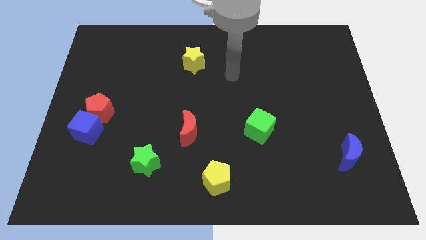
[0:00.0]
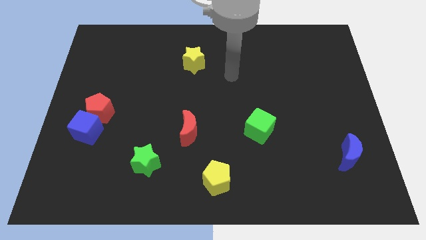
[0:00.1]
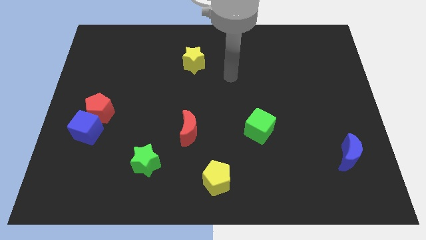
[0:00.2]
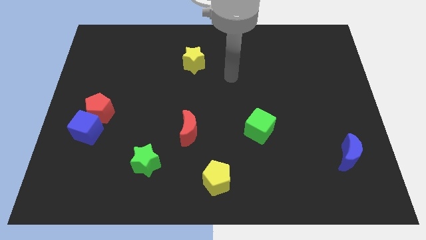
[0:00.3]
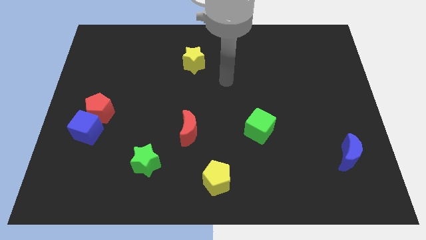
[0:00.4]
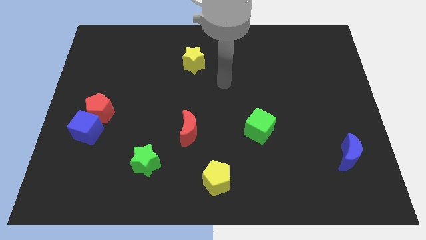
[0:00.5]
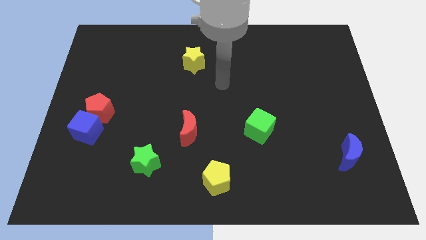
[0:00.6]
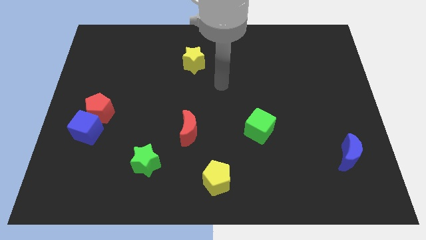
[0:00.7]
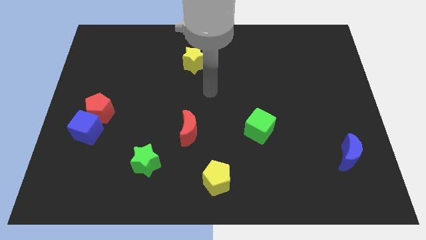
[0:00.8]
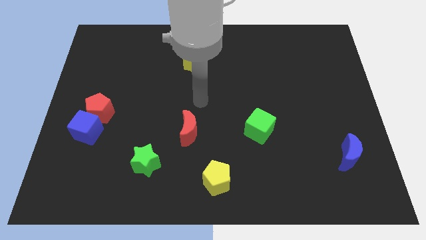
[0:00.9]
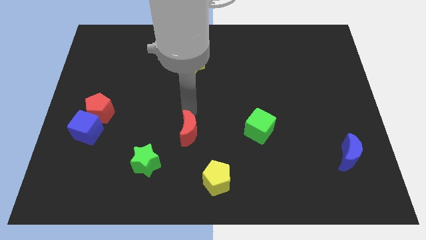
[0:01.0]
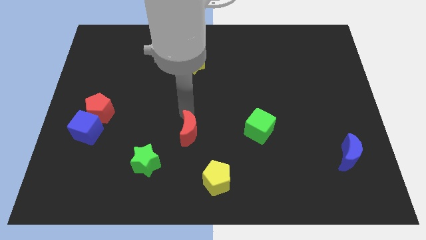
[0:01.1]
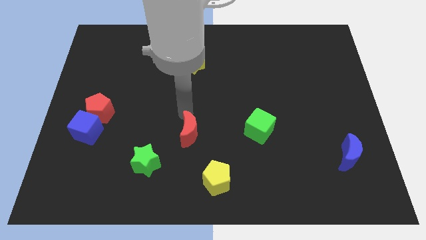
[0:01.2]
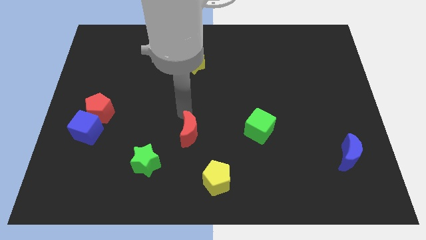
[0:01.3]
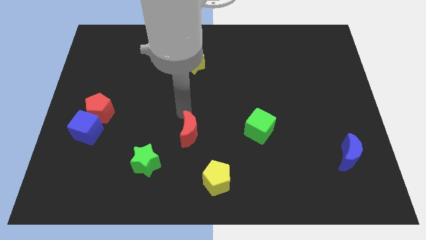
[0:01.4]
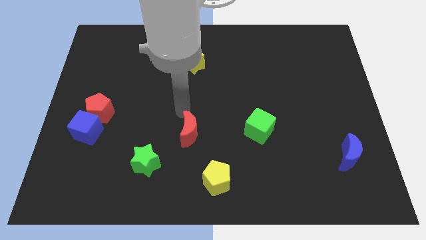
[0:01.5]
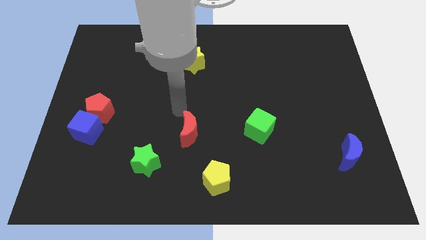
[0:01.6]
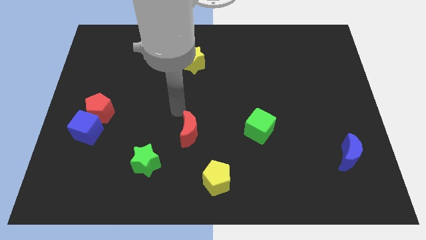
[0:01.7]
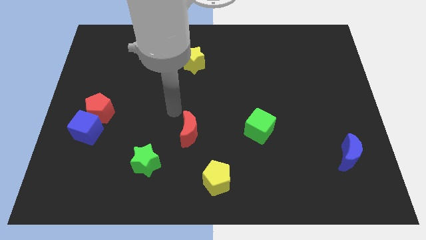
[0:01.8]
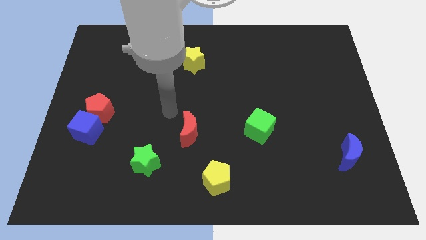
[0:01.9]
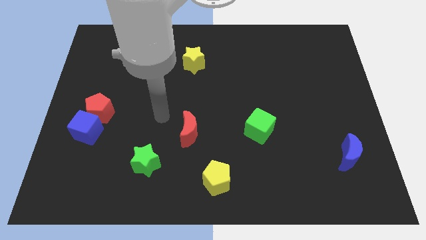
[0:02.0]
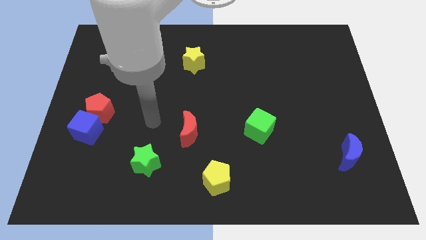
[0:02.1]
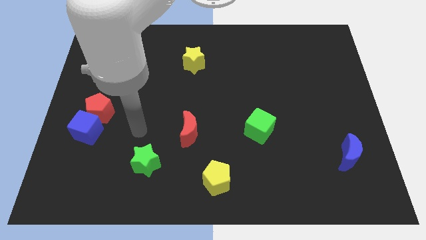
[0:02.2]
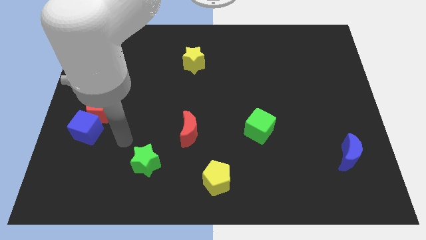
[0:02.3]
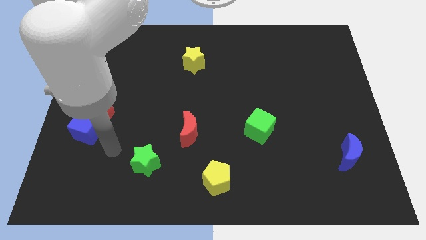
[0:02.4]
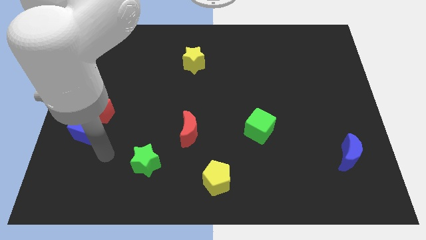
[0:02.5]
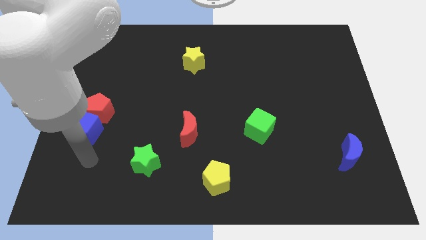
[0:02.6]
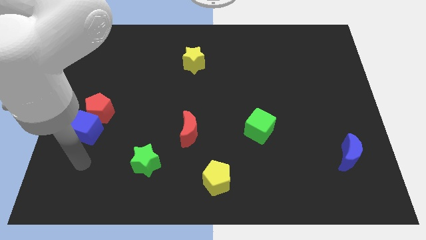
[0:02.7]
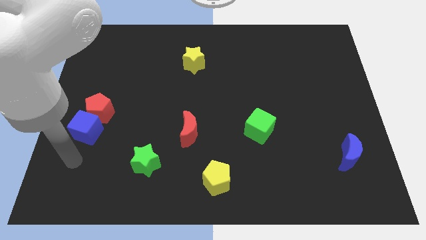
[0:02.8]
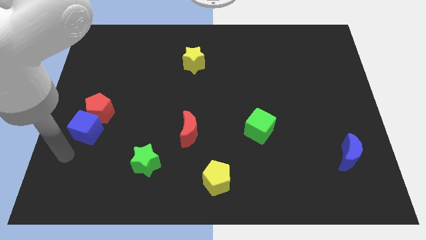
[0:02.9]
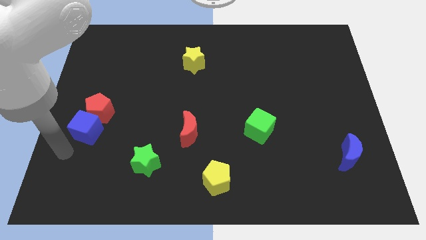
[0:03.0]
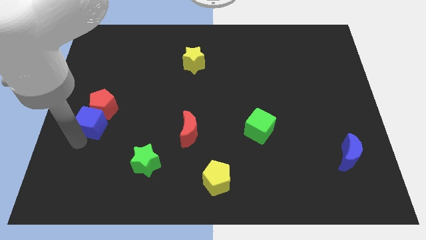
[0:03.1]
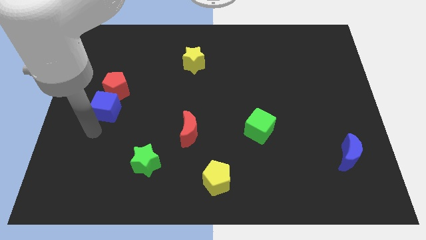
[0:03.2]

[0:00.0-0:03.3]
move the blue cube towards the top of the board along with red pentagon

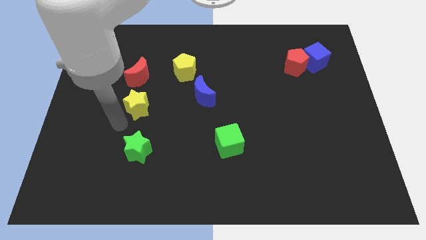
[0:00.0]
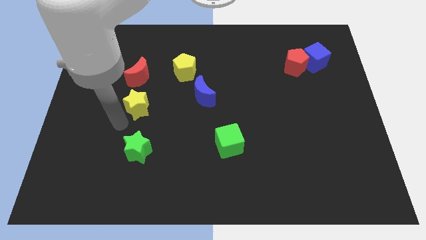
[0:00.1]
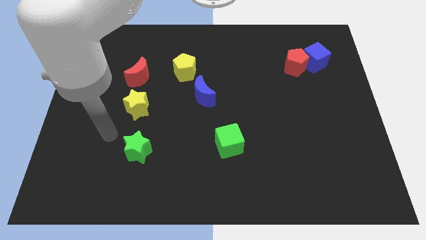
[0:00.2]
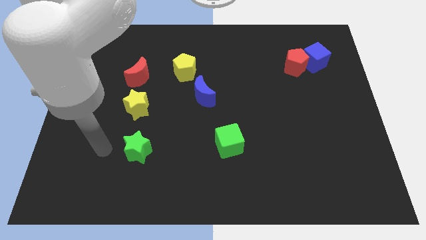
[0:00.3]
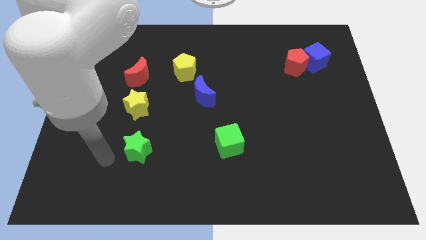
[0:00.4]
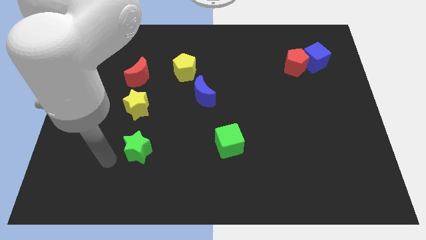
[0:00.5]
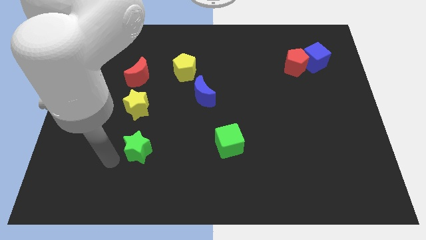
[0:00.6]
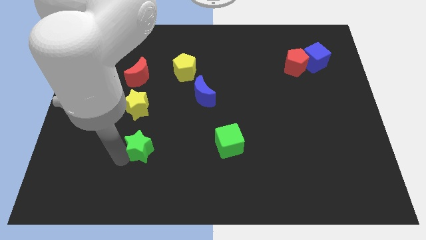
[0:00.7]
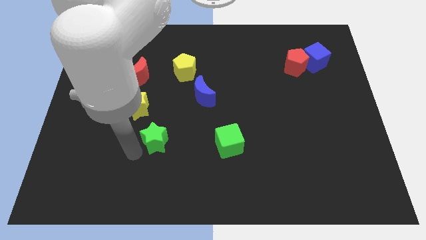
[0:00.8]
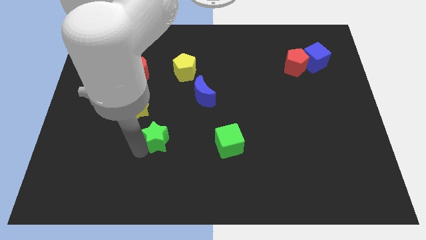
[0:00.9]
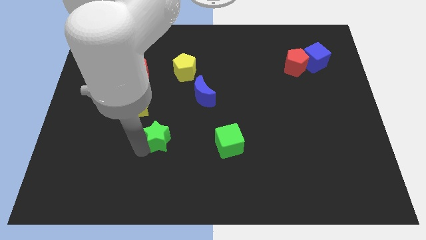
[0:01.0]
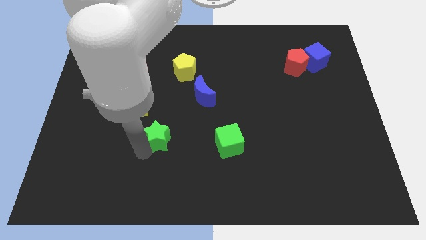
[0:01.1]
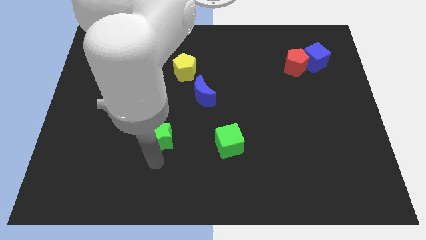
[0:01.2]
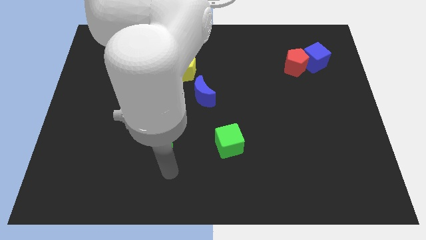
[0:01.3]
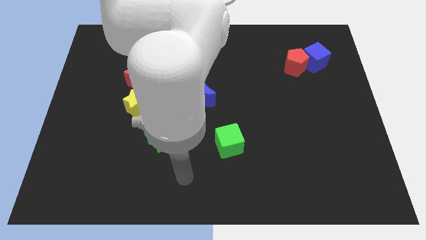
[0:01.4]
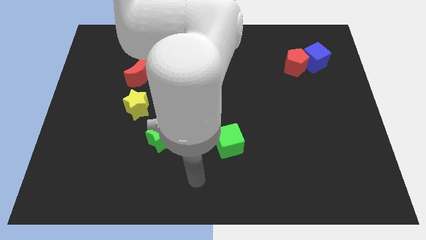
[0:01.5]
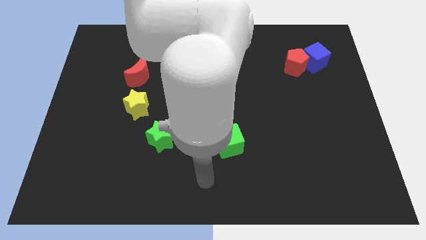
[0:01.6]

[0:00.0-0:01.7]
move the green star slightly up

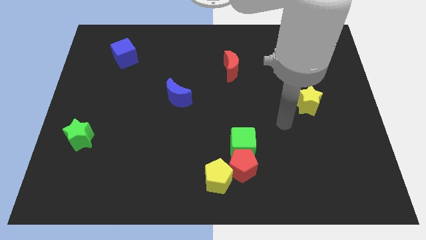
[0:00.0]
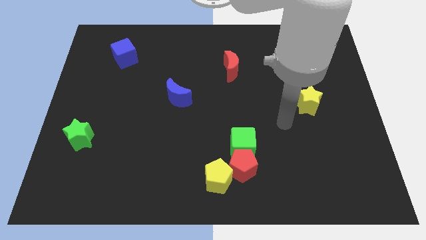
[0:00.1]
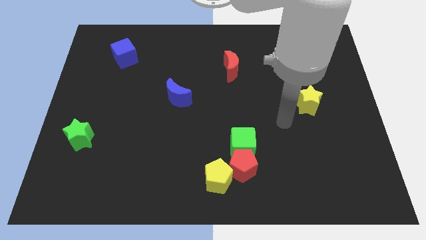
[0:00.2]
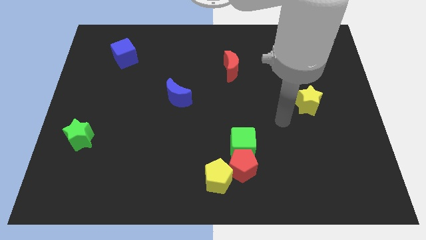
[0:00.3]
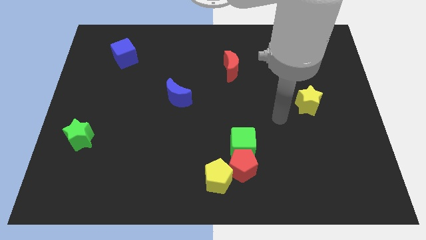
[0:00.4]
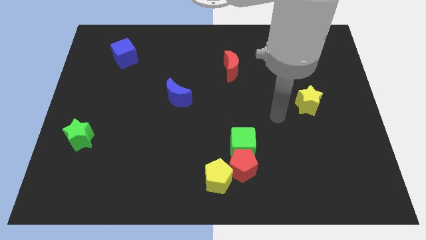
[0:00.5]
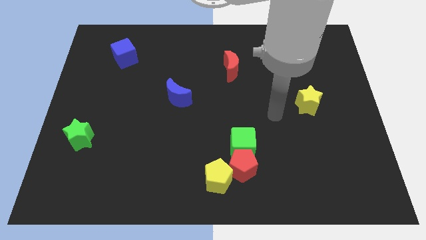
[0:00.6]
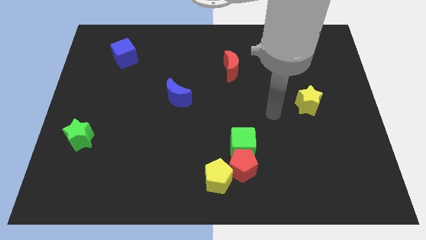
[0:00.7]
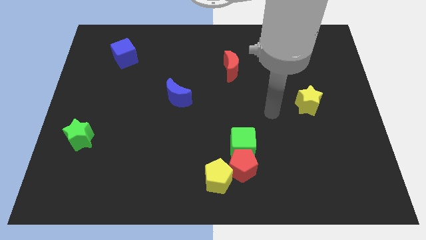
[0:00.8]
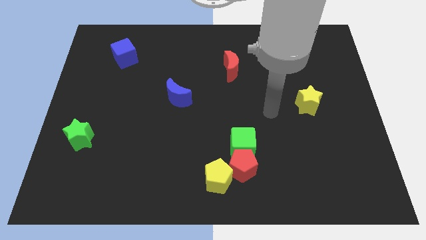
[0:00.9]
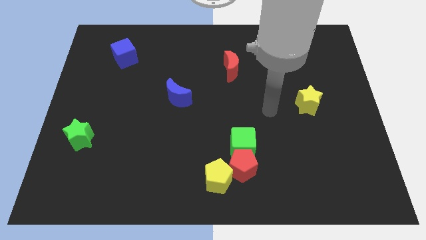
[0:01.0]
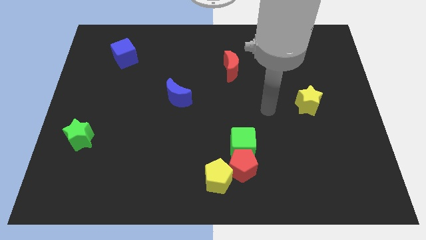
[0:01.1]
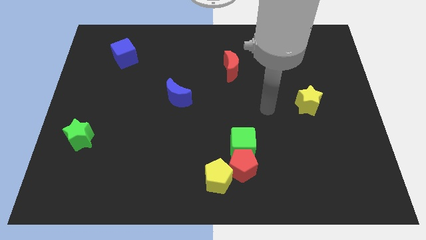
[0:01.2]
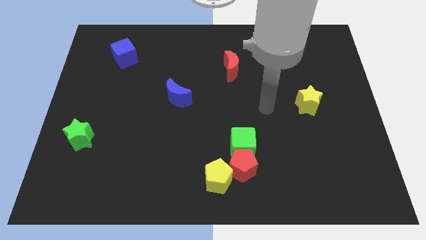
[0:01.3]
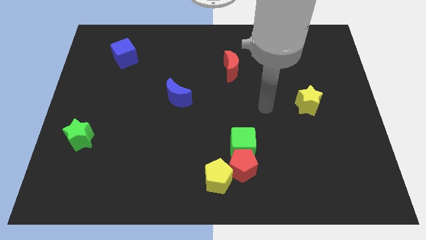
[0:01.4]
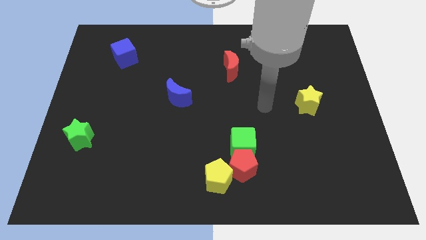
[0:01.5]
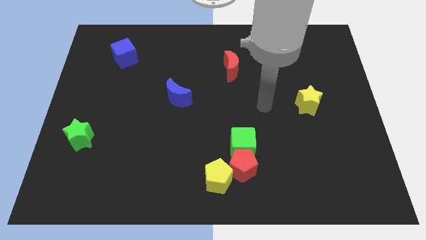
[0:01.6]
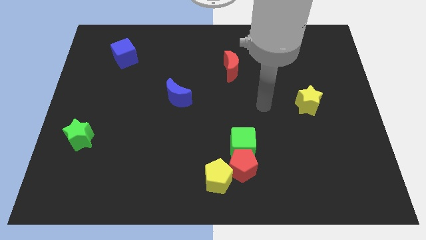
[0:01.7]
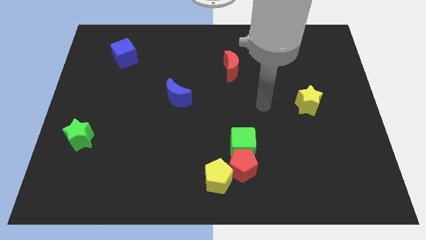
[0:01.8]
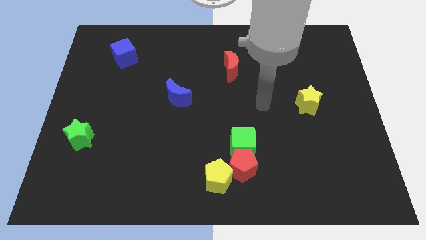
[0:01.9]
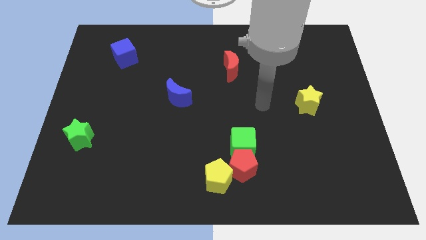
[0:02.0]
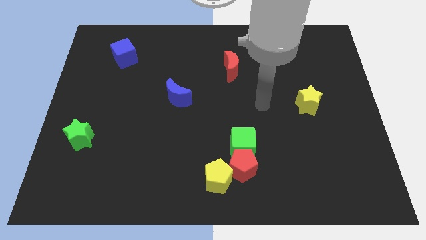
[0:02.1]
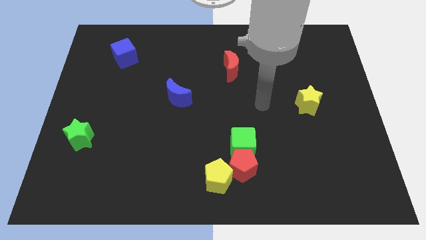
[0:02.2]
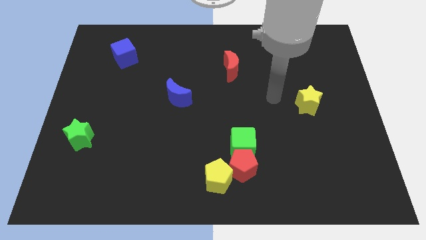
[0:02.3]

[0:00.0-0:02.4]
move your hand to the left side of the yellow star

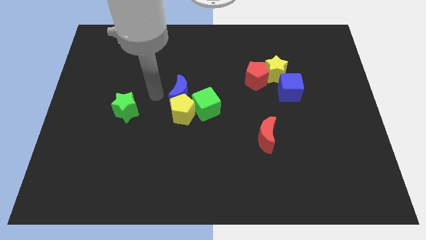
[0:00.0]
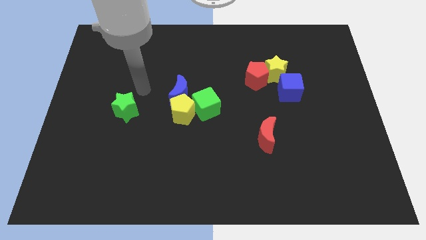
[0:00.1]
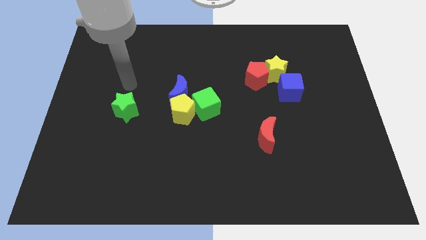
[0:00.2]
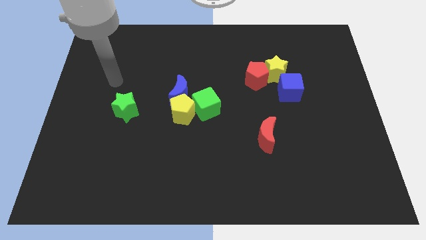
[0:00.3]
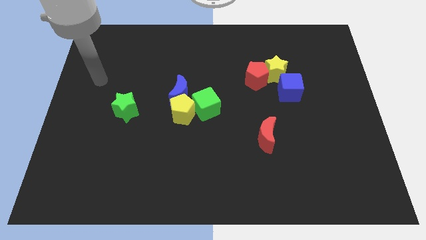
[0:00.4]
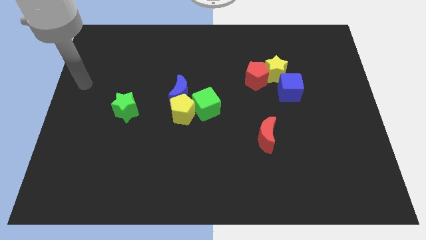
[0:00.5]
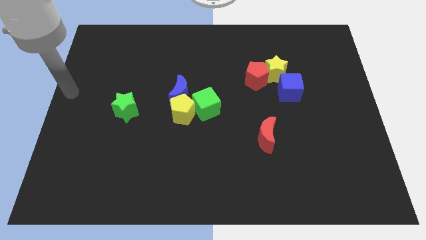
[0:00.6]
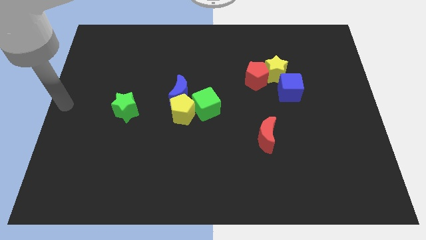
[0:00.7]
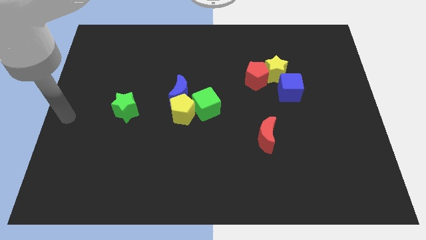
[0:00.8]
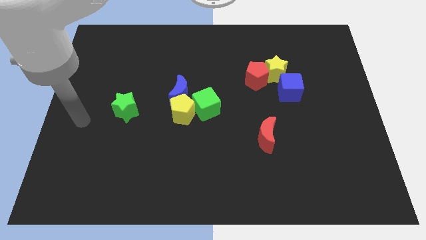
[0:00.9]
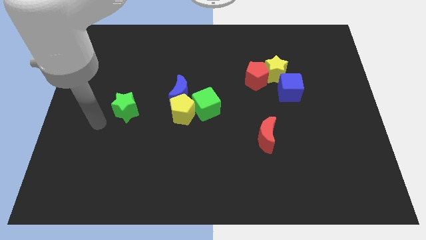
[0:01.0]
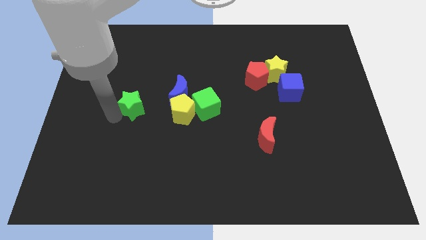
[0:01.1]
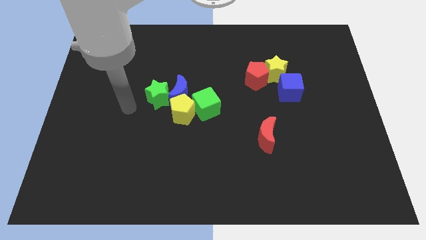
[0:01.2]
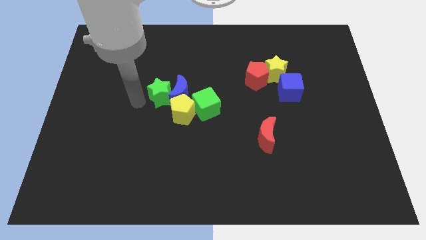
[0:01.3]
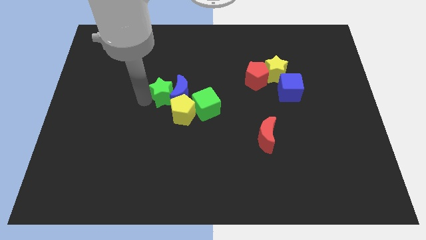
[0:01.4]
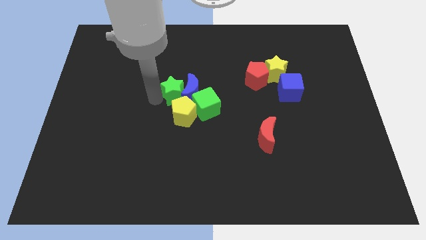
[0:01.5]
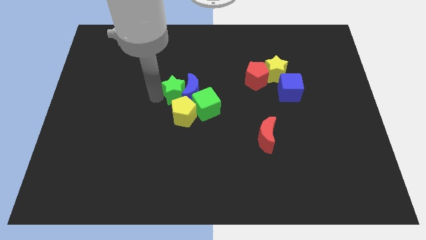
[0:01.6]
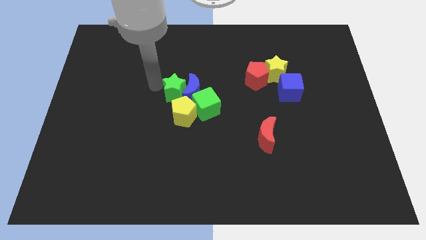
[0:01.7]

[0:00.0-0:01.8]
move the green star into the blue moon
